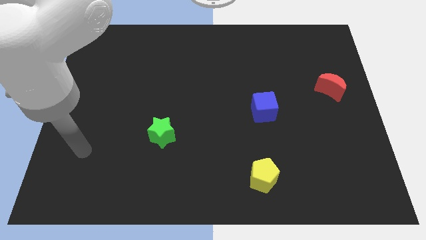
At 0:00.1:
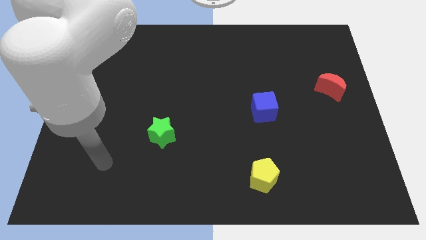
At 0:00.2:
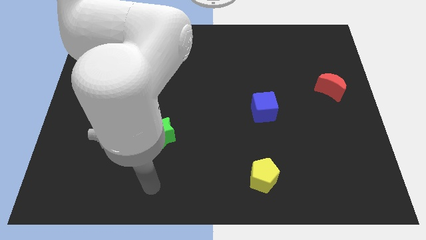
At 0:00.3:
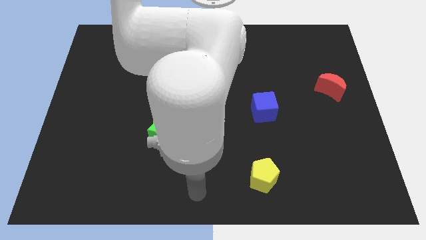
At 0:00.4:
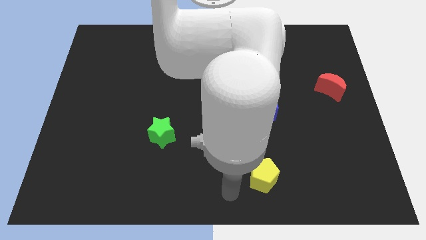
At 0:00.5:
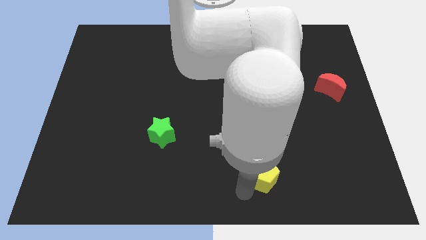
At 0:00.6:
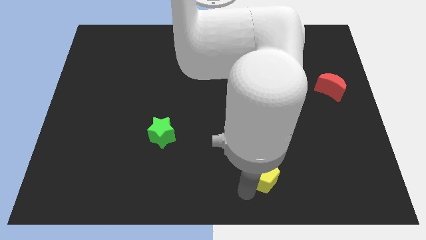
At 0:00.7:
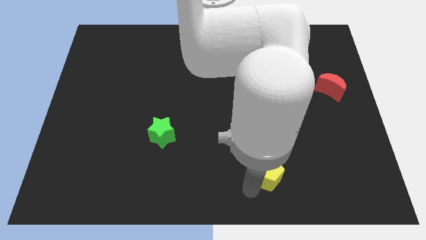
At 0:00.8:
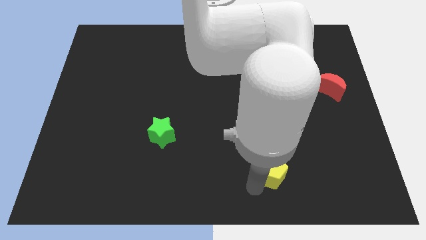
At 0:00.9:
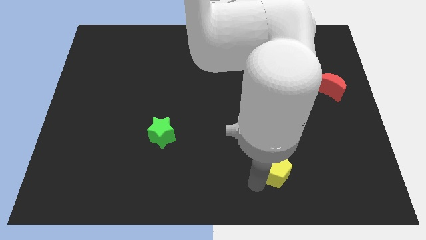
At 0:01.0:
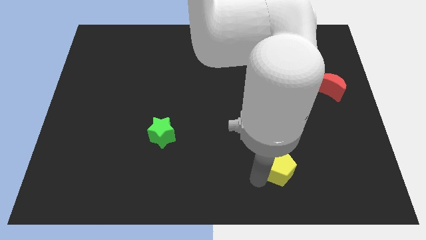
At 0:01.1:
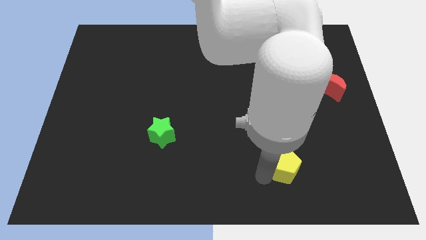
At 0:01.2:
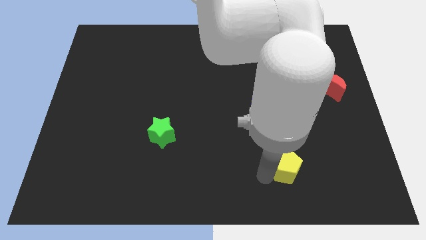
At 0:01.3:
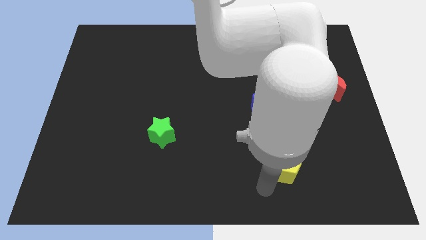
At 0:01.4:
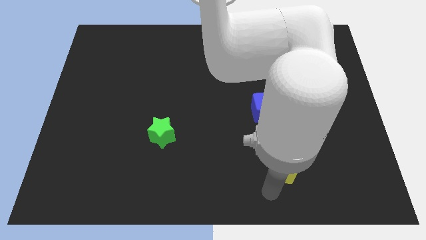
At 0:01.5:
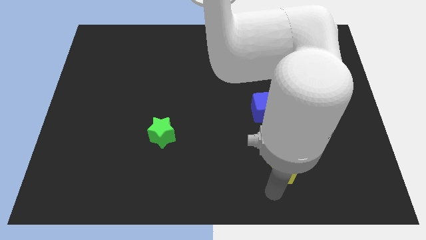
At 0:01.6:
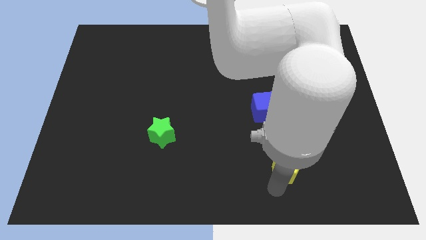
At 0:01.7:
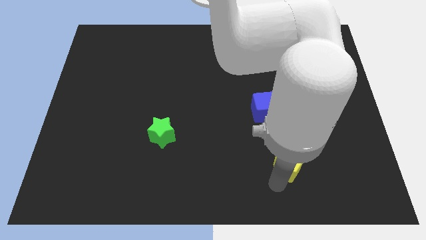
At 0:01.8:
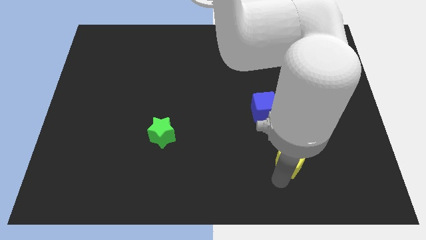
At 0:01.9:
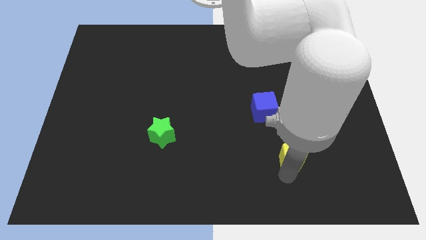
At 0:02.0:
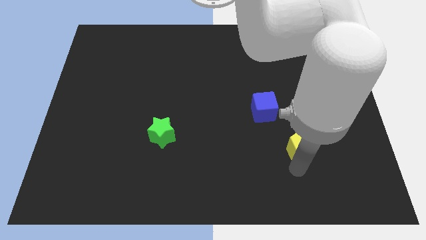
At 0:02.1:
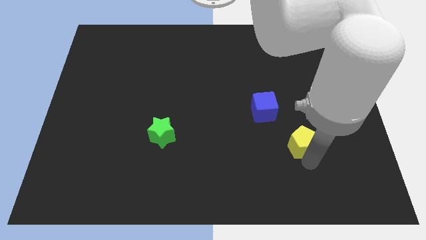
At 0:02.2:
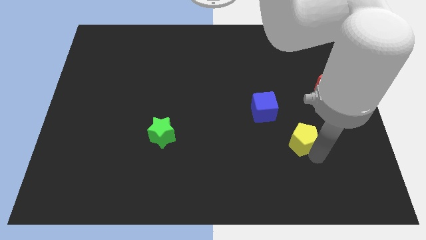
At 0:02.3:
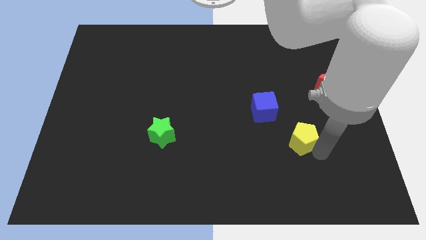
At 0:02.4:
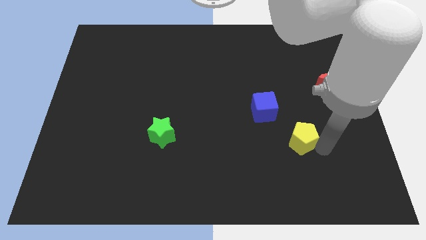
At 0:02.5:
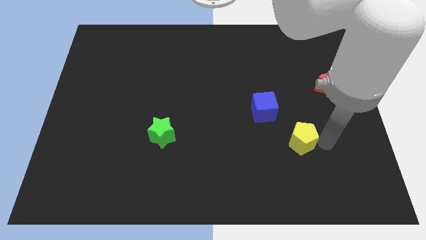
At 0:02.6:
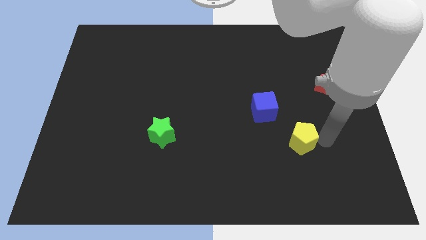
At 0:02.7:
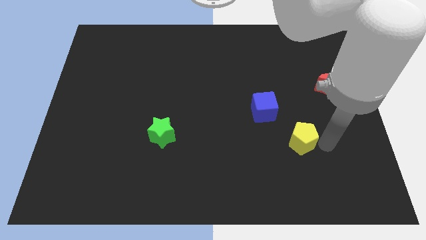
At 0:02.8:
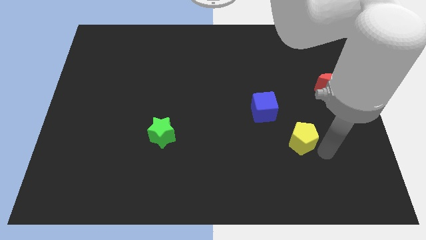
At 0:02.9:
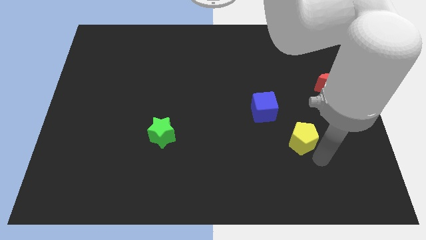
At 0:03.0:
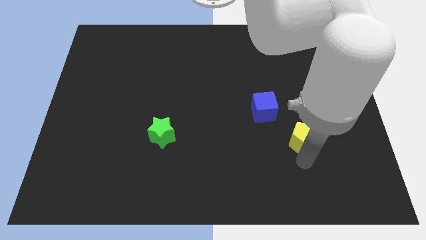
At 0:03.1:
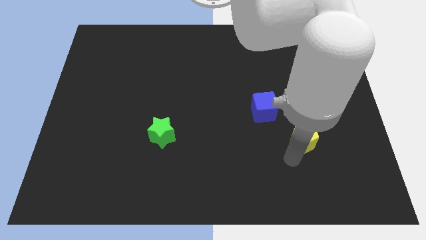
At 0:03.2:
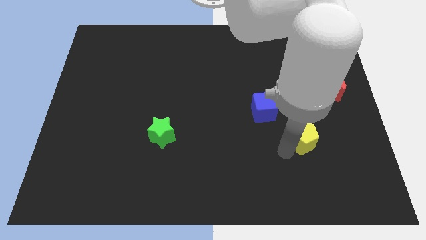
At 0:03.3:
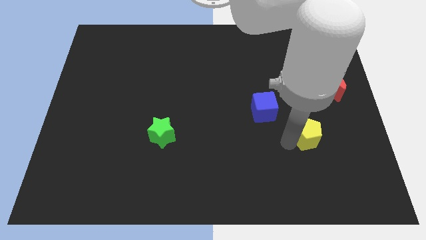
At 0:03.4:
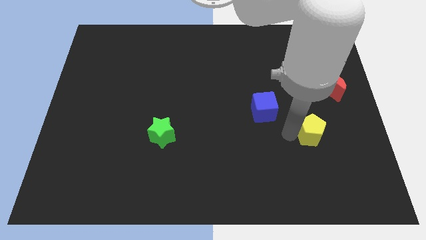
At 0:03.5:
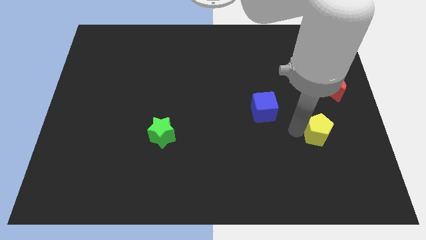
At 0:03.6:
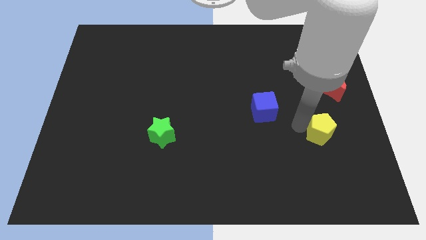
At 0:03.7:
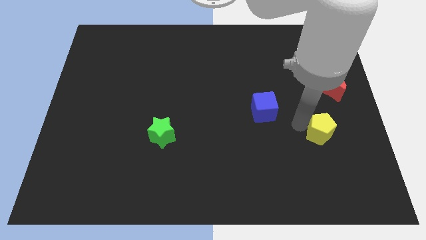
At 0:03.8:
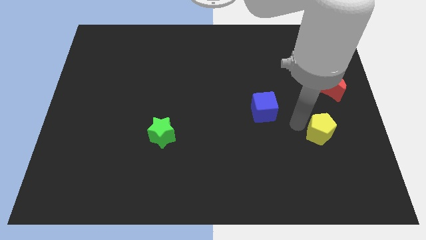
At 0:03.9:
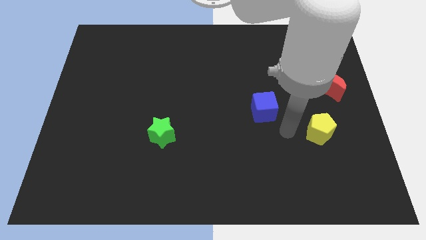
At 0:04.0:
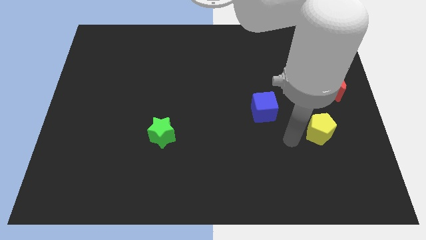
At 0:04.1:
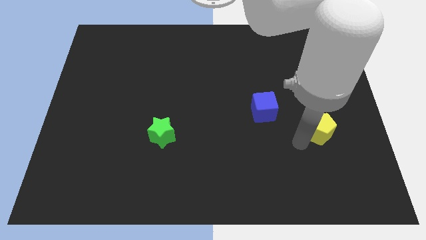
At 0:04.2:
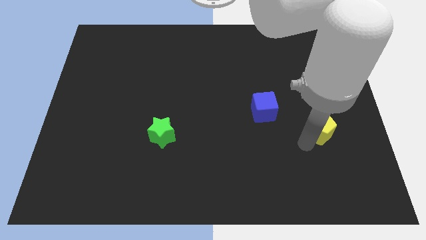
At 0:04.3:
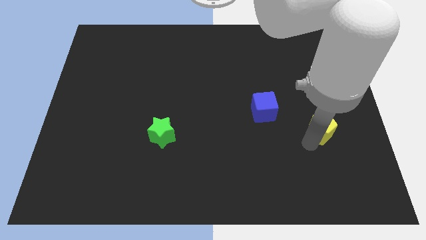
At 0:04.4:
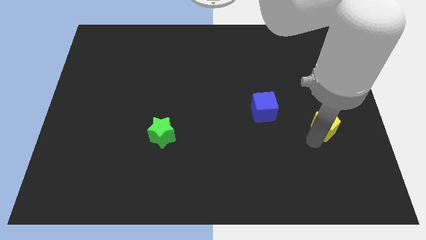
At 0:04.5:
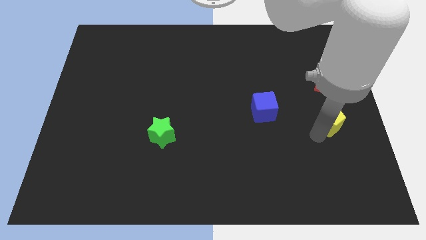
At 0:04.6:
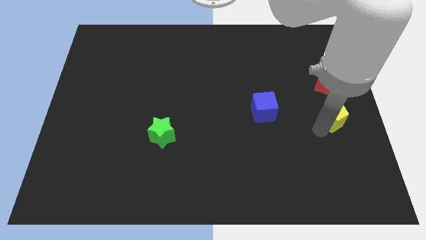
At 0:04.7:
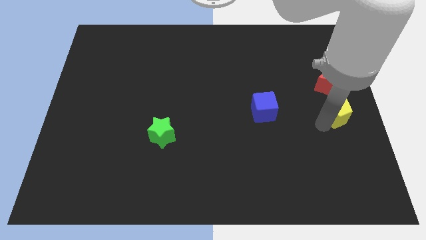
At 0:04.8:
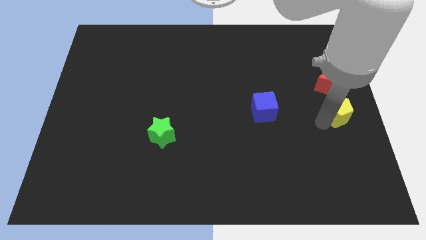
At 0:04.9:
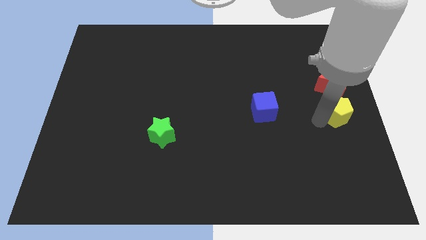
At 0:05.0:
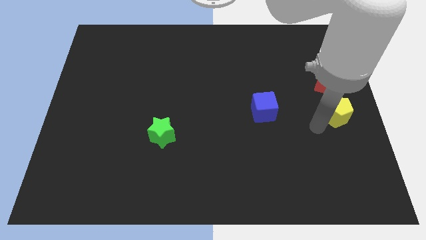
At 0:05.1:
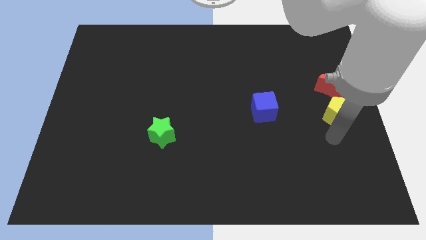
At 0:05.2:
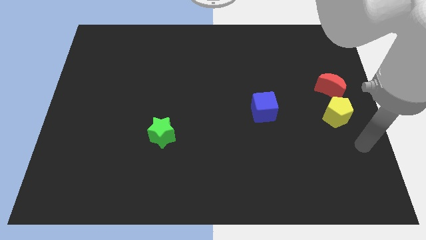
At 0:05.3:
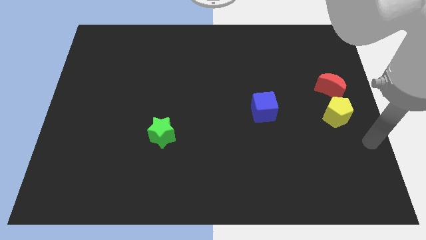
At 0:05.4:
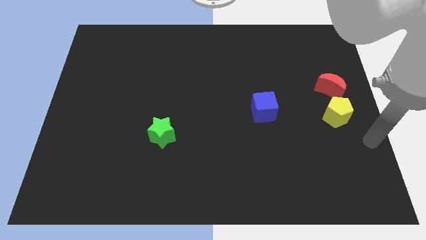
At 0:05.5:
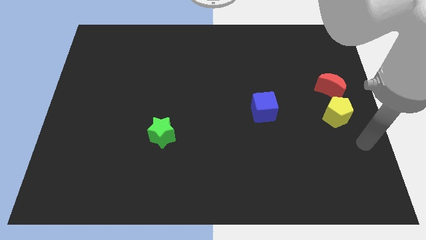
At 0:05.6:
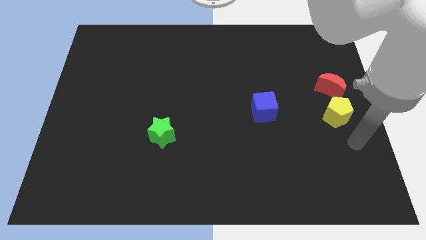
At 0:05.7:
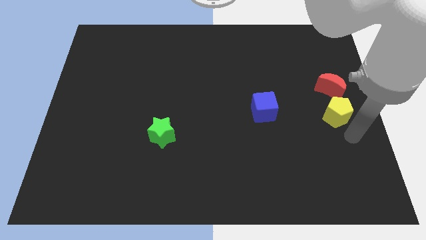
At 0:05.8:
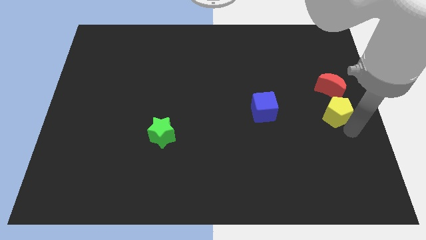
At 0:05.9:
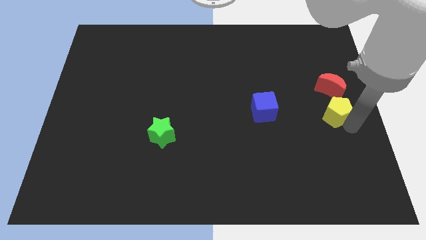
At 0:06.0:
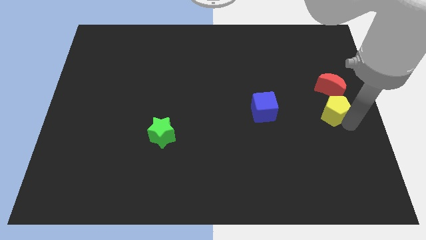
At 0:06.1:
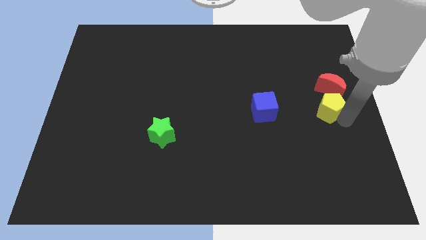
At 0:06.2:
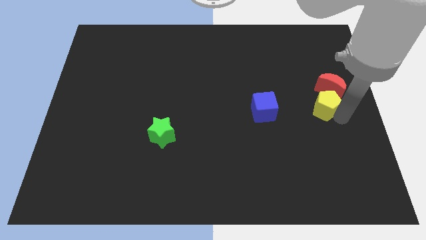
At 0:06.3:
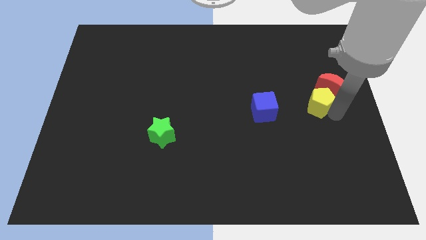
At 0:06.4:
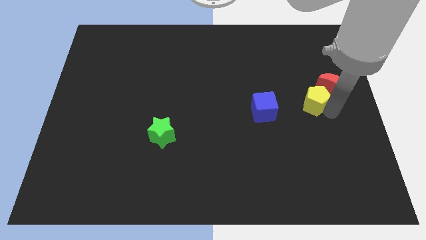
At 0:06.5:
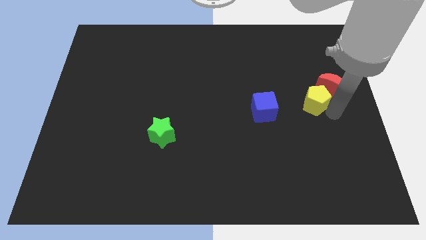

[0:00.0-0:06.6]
put the pentagon towards the red moon

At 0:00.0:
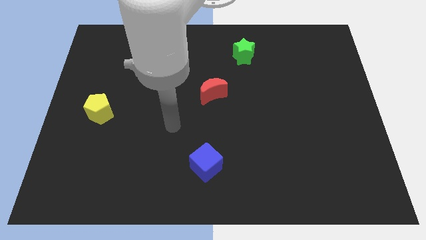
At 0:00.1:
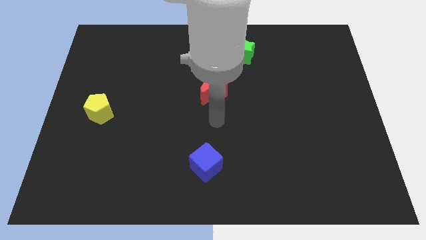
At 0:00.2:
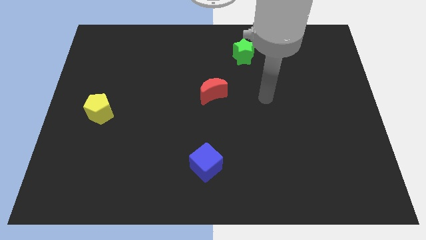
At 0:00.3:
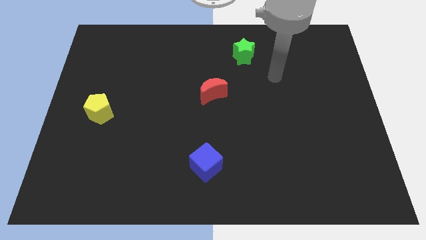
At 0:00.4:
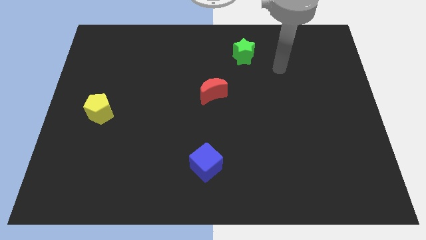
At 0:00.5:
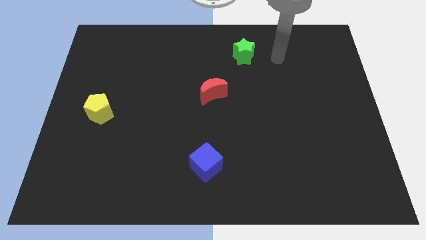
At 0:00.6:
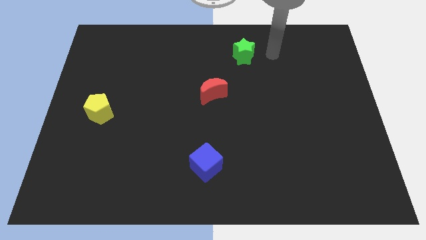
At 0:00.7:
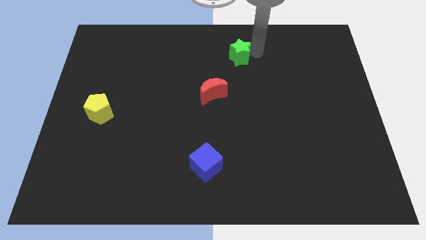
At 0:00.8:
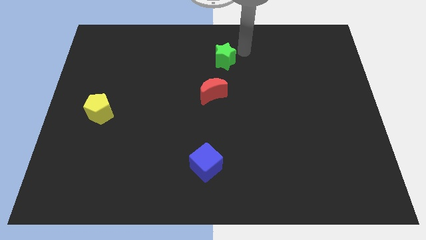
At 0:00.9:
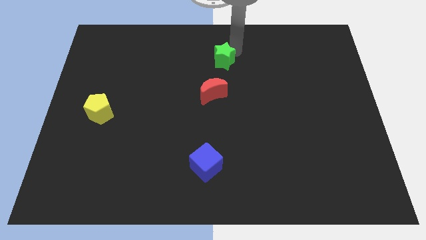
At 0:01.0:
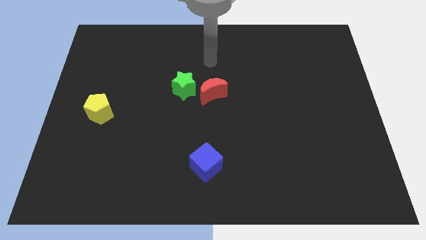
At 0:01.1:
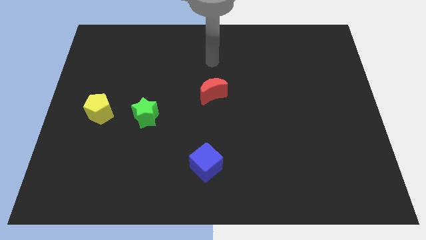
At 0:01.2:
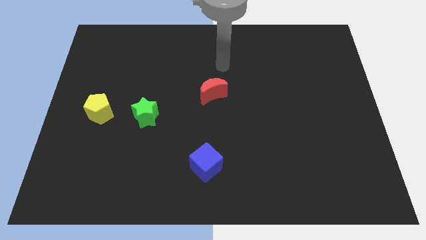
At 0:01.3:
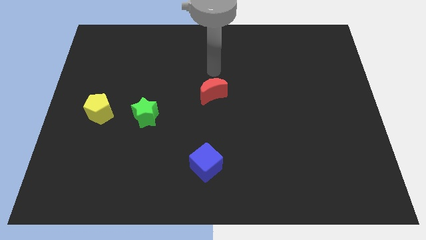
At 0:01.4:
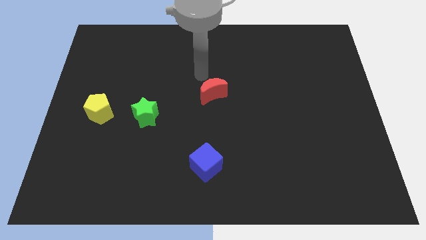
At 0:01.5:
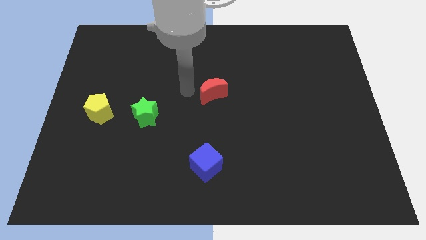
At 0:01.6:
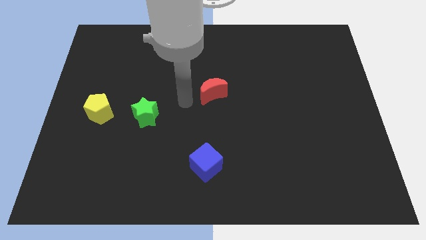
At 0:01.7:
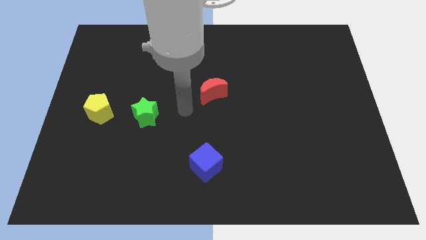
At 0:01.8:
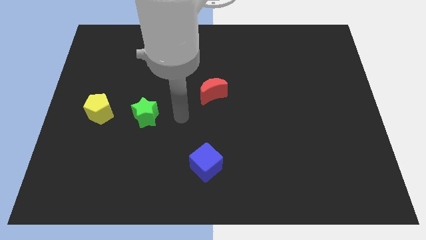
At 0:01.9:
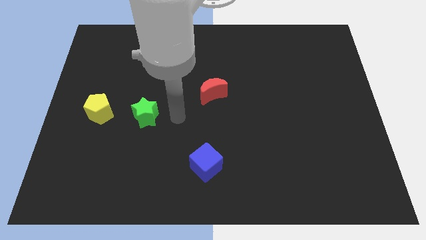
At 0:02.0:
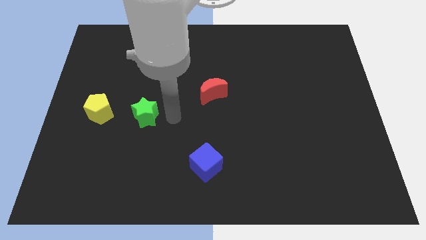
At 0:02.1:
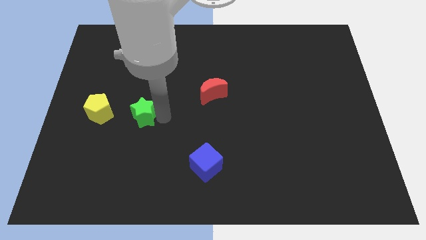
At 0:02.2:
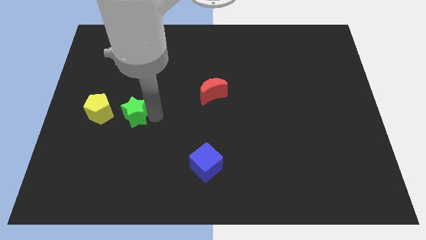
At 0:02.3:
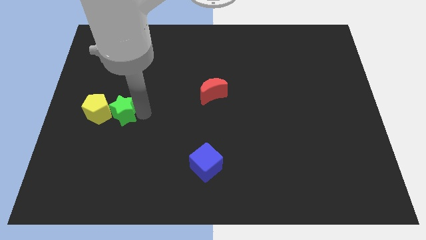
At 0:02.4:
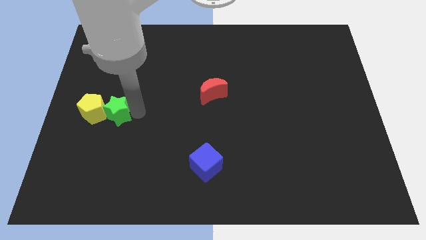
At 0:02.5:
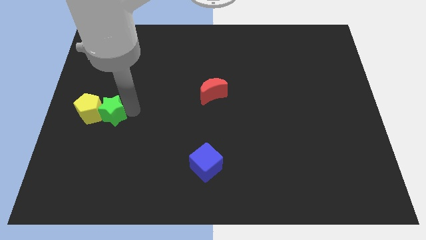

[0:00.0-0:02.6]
put the star next to the yellow block
